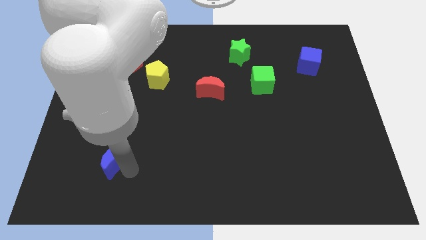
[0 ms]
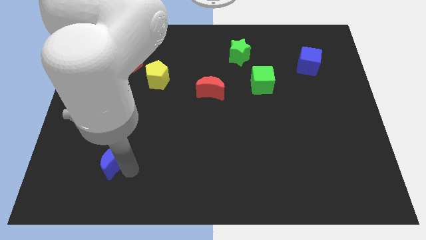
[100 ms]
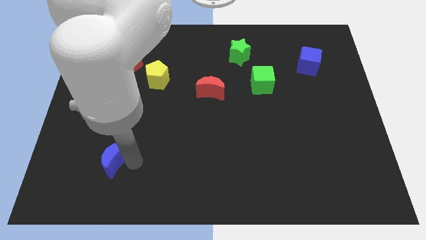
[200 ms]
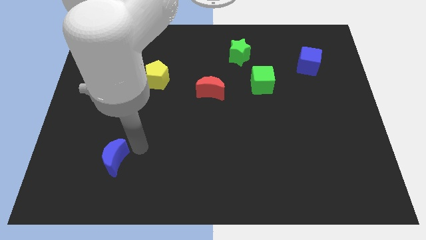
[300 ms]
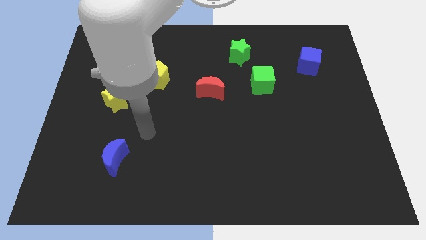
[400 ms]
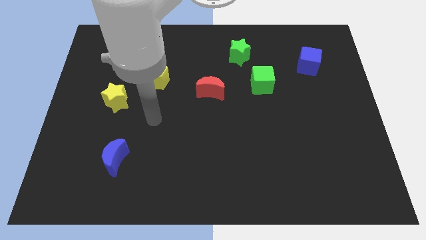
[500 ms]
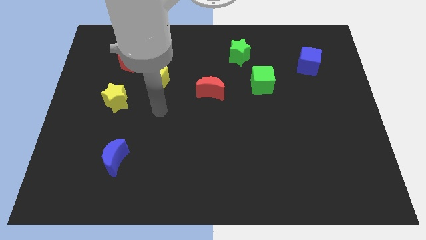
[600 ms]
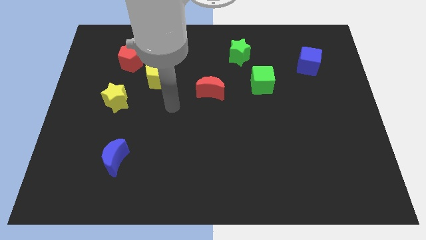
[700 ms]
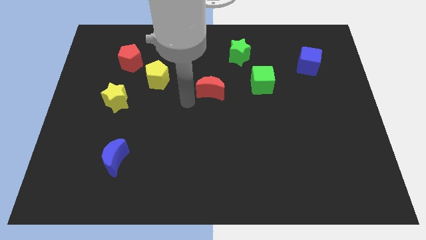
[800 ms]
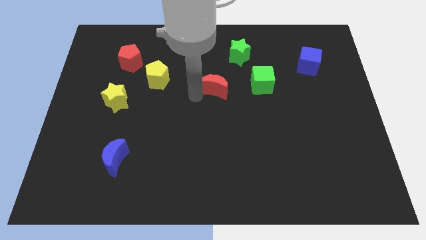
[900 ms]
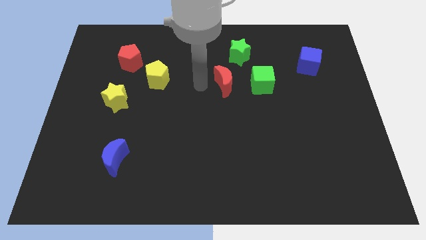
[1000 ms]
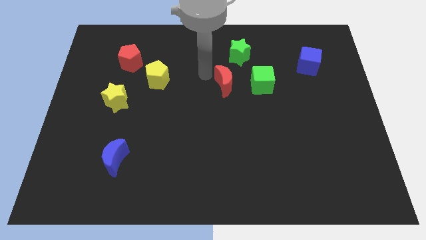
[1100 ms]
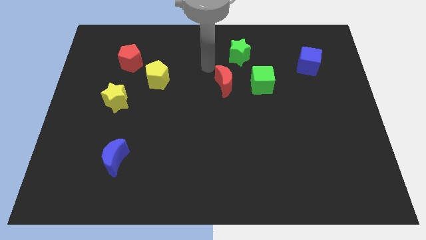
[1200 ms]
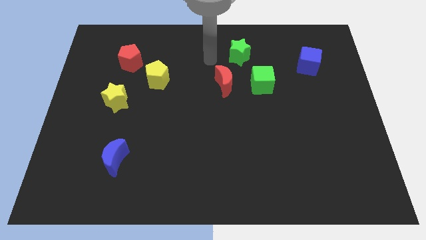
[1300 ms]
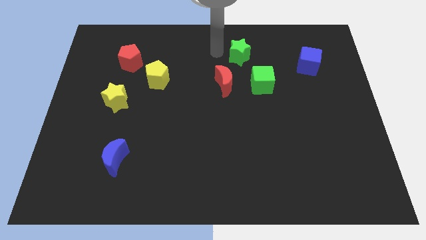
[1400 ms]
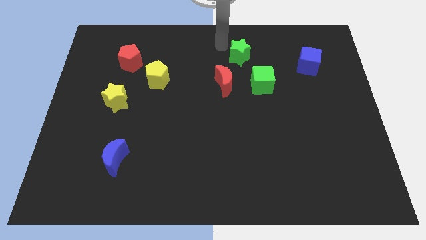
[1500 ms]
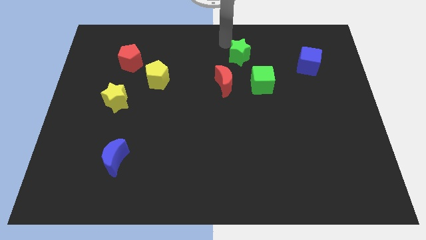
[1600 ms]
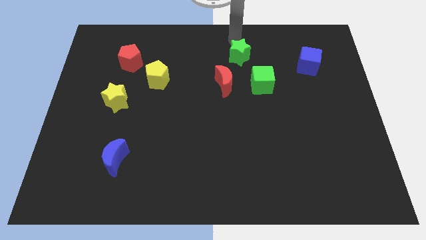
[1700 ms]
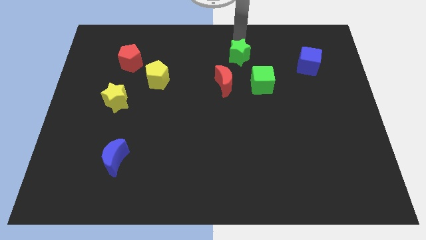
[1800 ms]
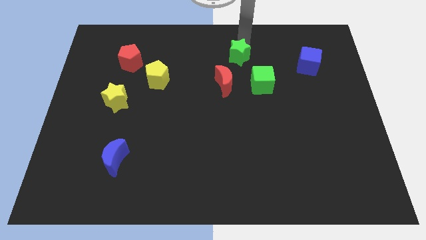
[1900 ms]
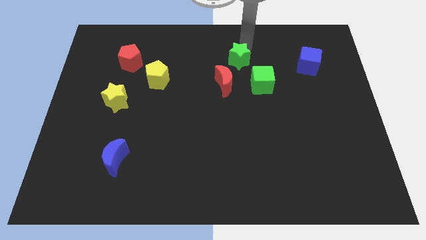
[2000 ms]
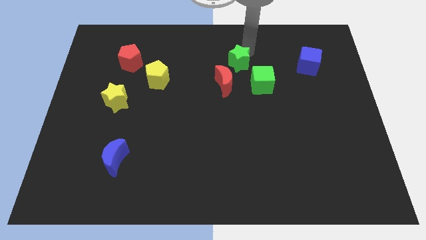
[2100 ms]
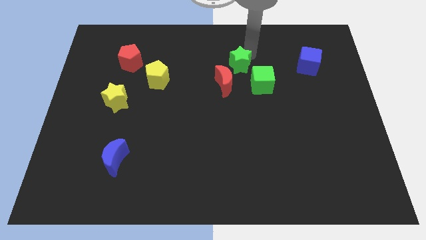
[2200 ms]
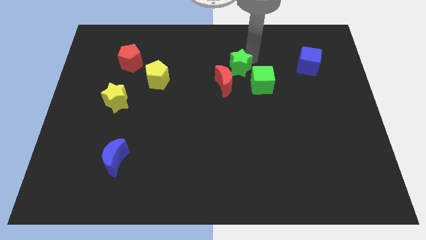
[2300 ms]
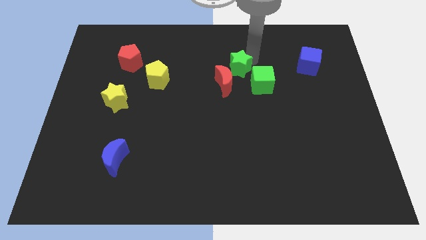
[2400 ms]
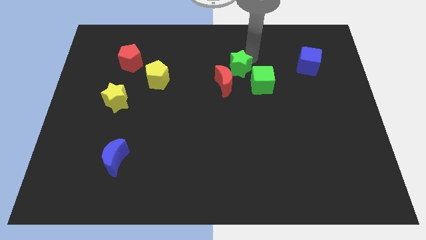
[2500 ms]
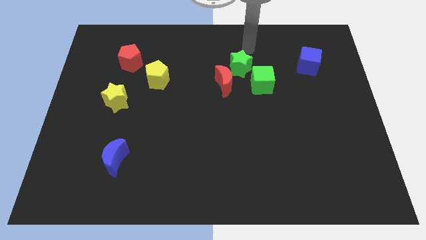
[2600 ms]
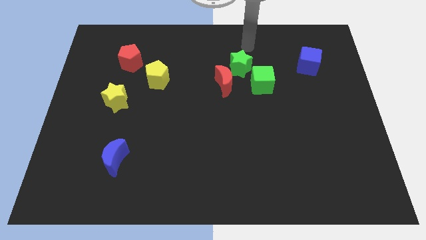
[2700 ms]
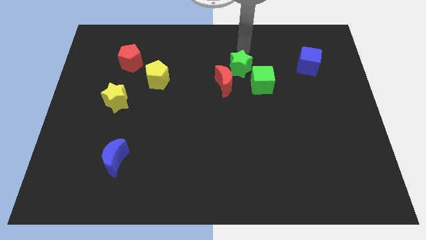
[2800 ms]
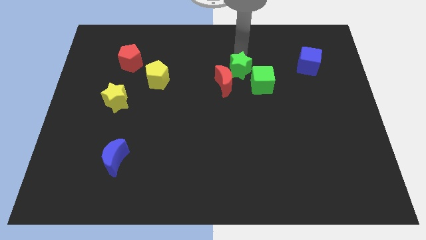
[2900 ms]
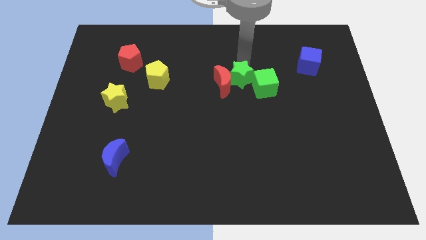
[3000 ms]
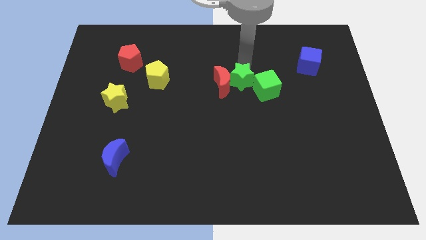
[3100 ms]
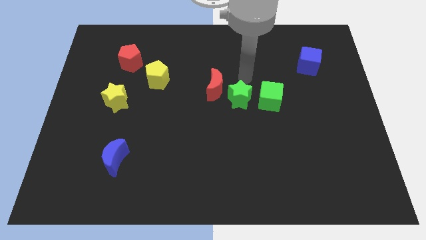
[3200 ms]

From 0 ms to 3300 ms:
place the green star in between red crescent and green cube

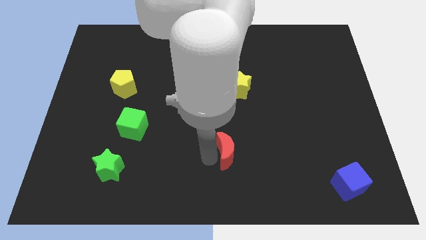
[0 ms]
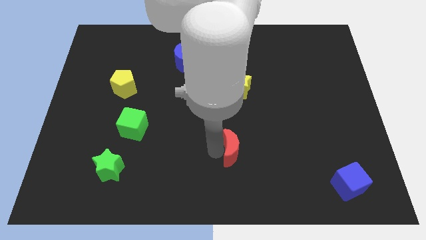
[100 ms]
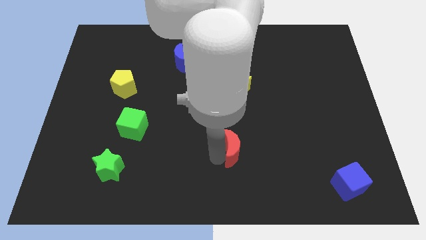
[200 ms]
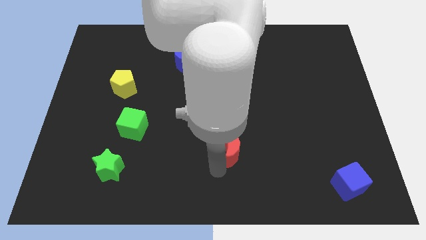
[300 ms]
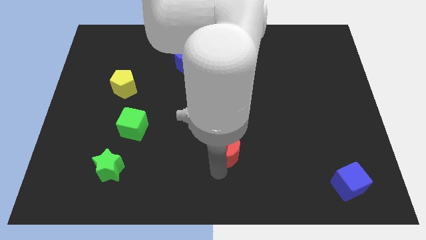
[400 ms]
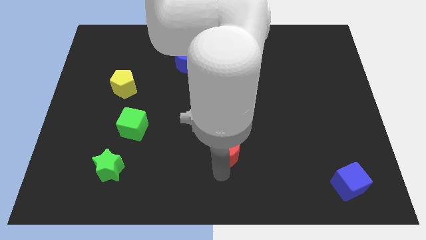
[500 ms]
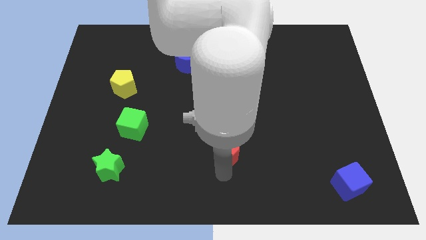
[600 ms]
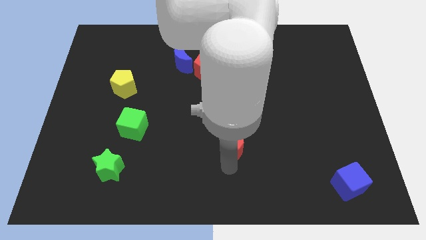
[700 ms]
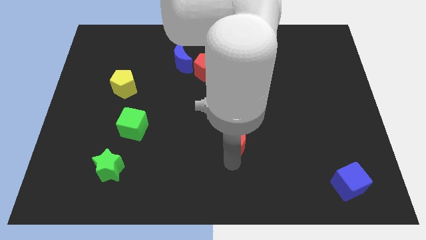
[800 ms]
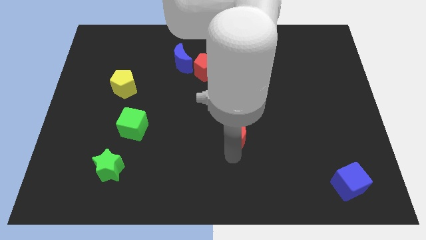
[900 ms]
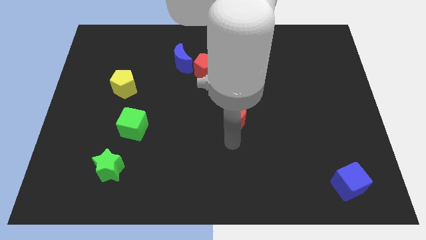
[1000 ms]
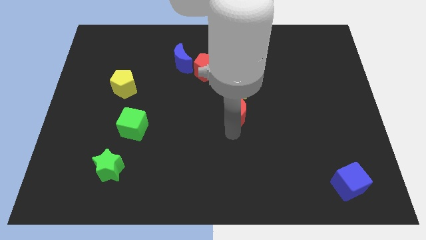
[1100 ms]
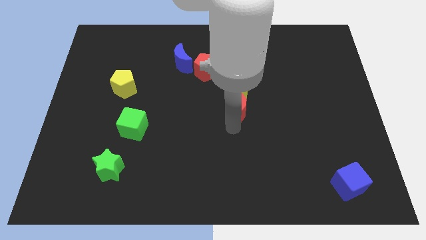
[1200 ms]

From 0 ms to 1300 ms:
move the red crescent to the center of the board

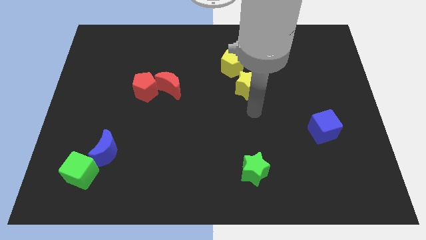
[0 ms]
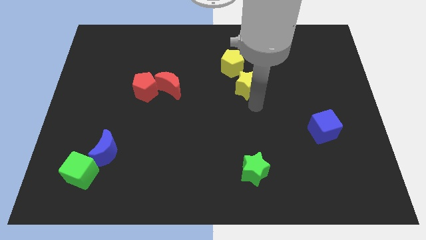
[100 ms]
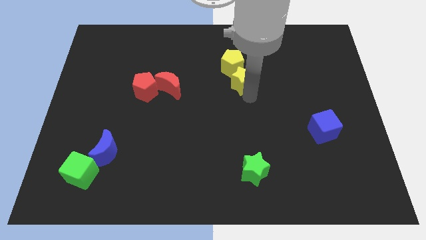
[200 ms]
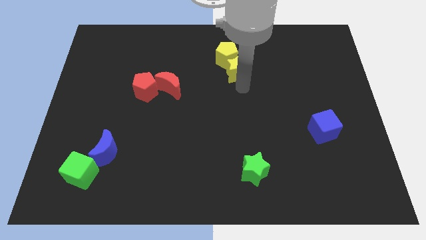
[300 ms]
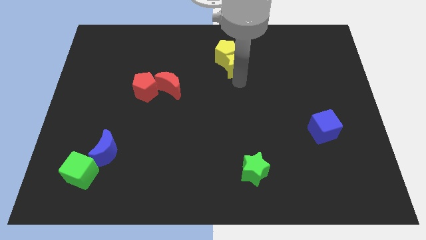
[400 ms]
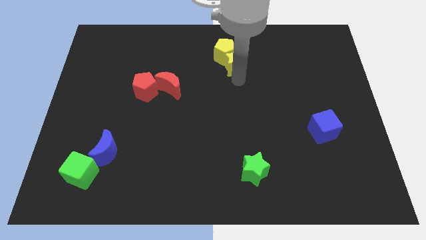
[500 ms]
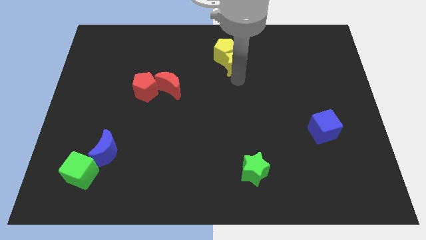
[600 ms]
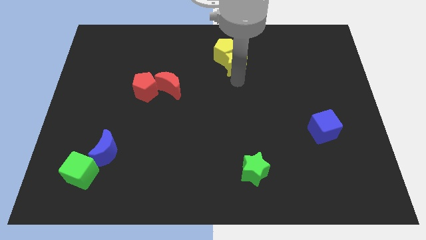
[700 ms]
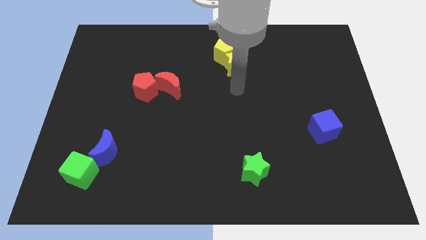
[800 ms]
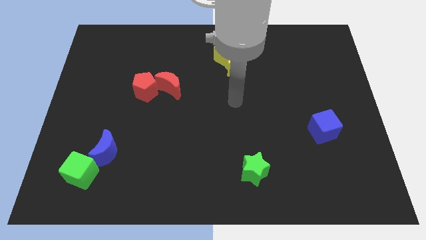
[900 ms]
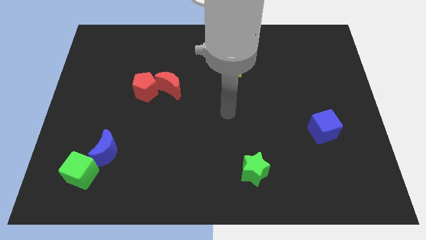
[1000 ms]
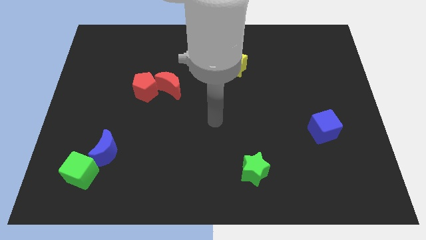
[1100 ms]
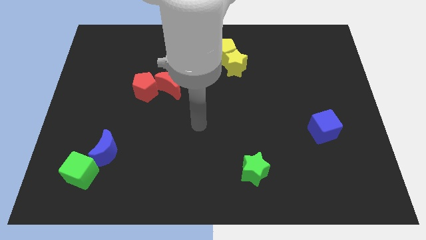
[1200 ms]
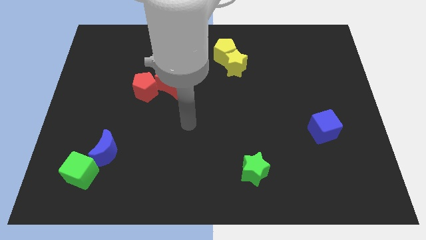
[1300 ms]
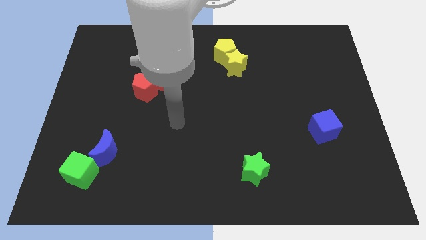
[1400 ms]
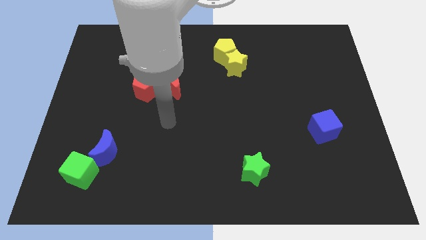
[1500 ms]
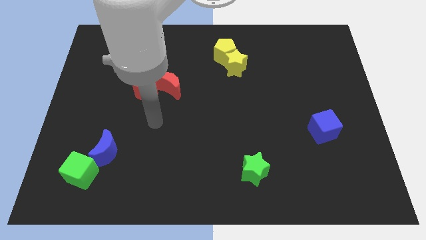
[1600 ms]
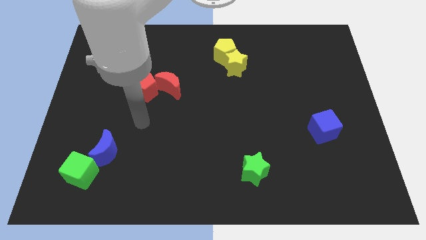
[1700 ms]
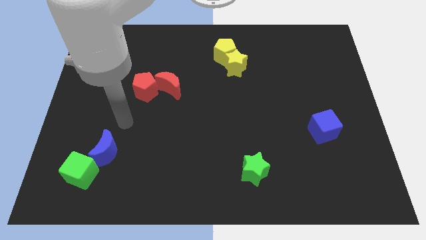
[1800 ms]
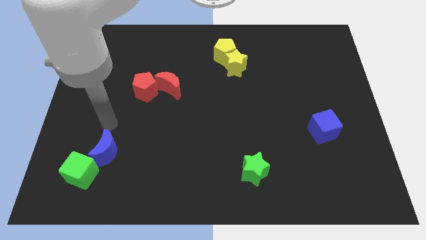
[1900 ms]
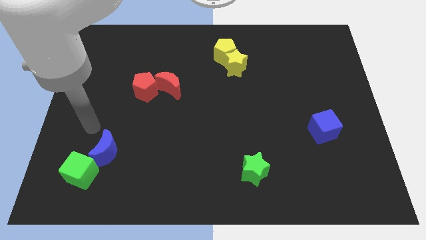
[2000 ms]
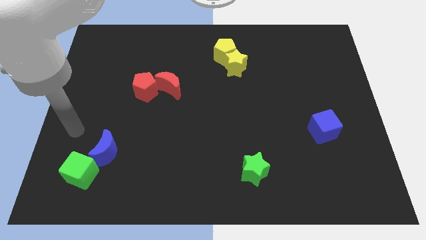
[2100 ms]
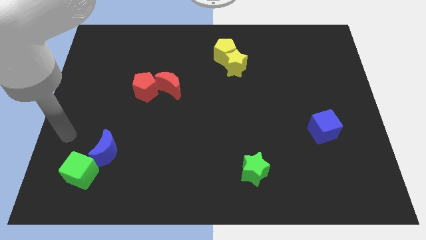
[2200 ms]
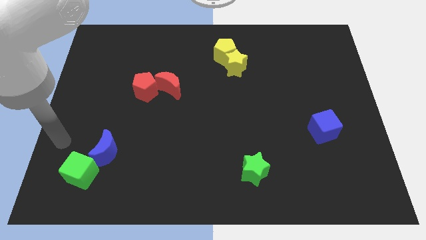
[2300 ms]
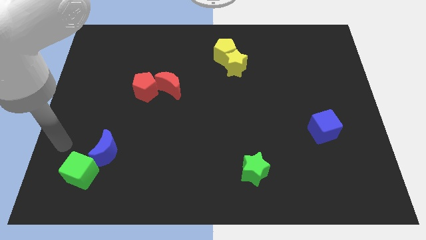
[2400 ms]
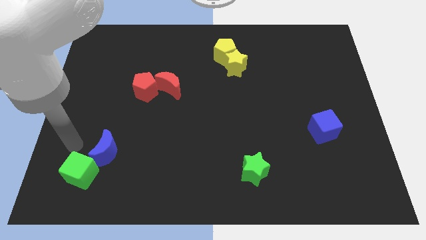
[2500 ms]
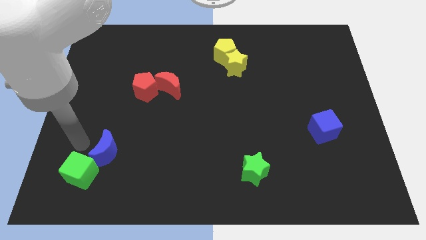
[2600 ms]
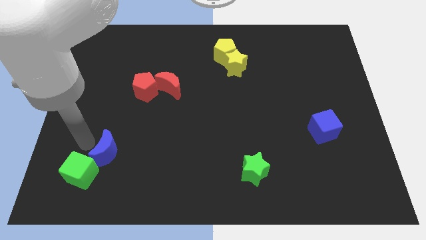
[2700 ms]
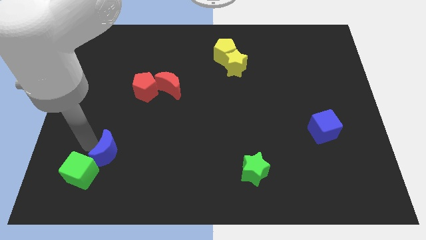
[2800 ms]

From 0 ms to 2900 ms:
move the yellow blocks towards top of the board

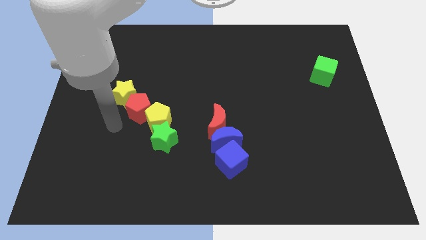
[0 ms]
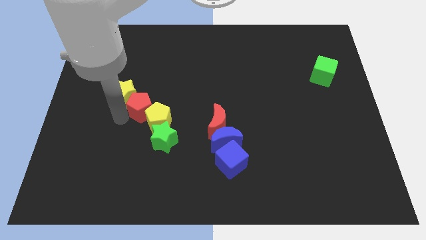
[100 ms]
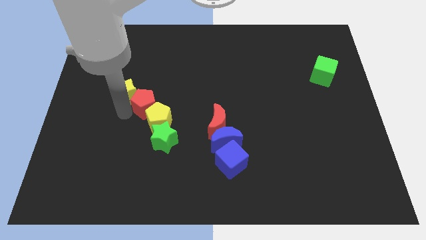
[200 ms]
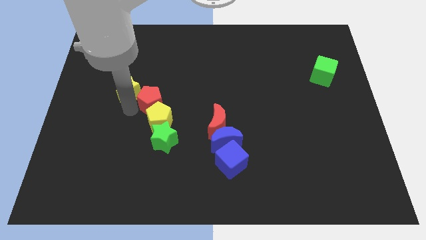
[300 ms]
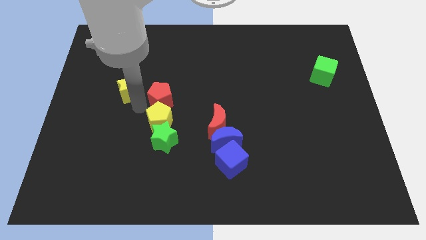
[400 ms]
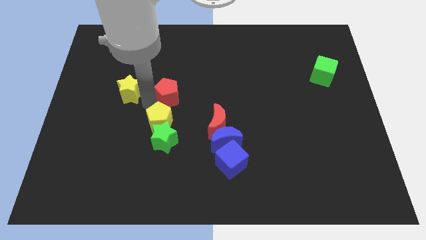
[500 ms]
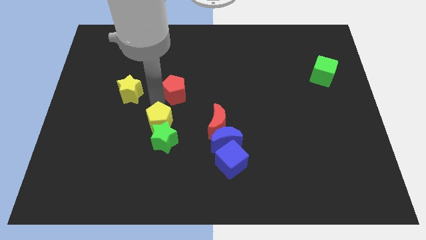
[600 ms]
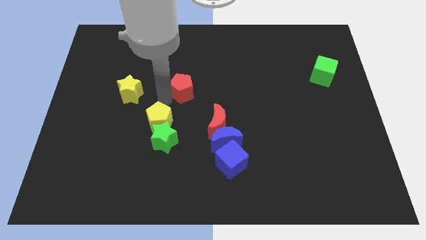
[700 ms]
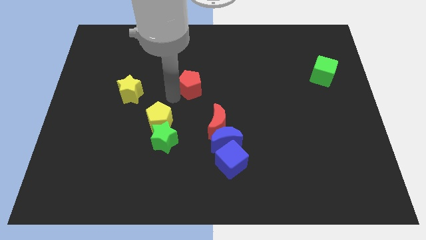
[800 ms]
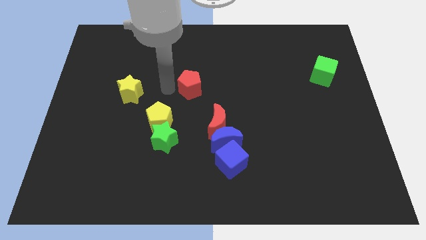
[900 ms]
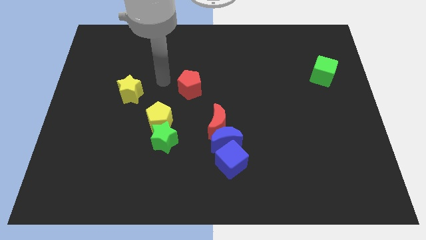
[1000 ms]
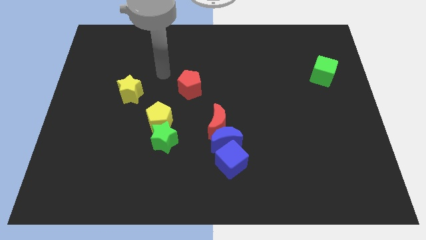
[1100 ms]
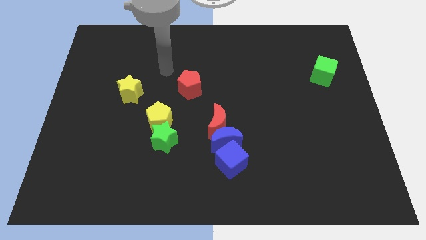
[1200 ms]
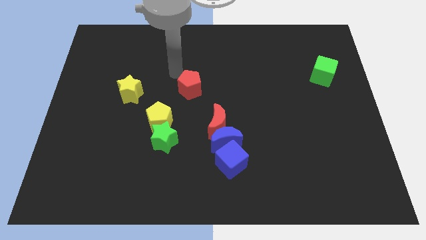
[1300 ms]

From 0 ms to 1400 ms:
separate the red pentagon from the yellow pentagon and yellow star
